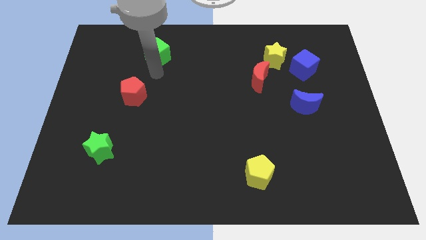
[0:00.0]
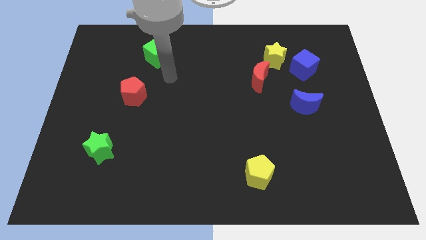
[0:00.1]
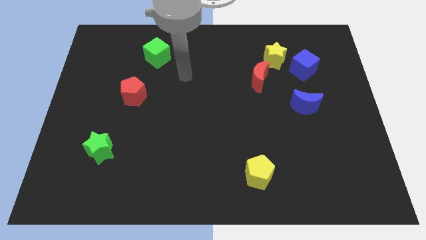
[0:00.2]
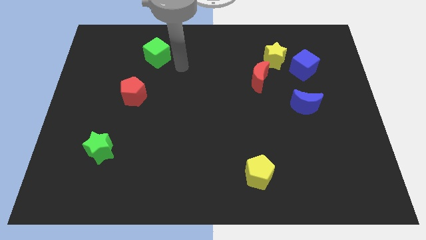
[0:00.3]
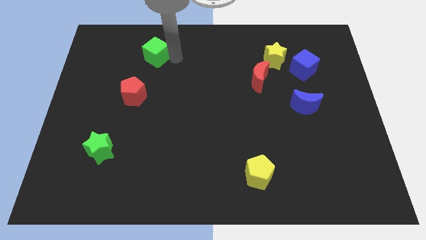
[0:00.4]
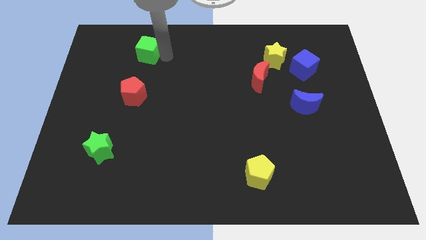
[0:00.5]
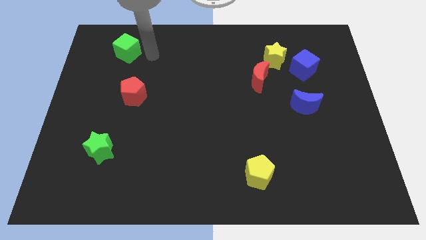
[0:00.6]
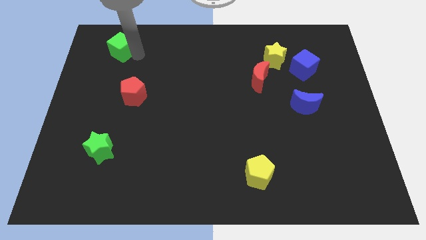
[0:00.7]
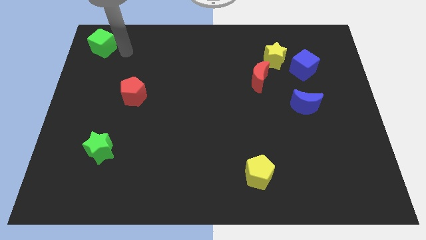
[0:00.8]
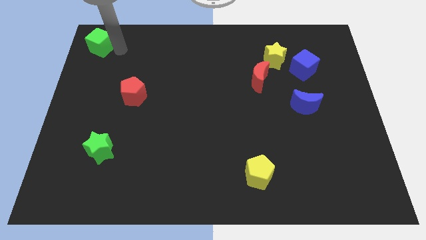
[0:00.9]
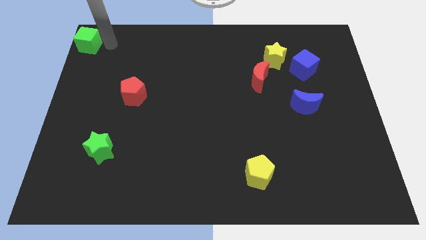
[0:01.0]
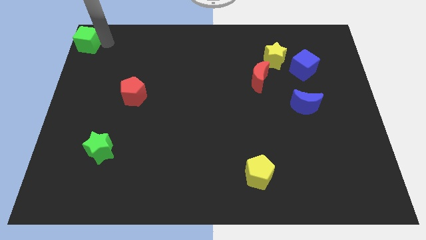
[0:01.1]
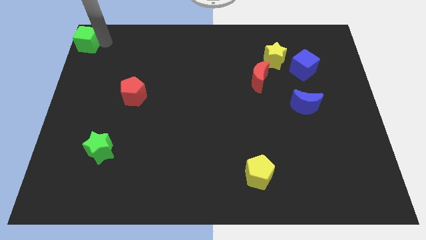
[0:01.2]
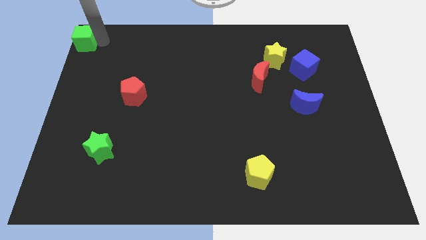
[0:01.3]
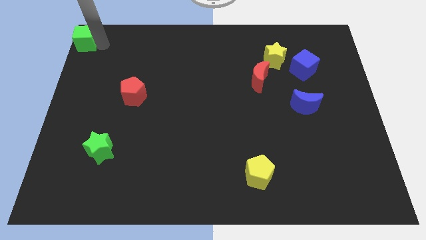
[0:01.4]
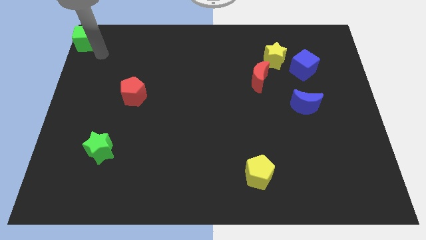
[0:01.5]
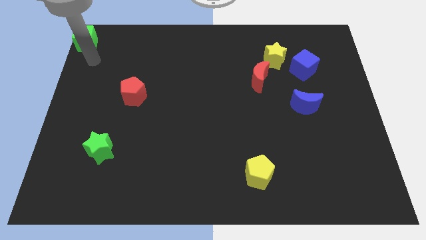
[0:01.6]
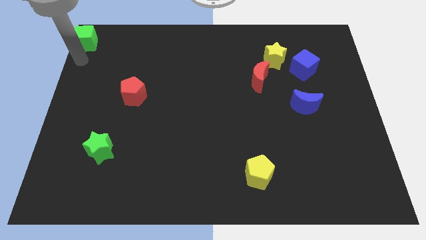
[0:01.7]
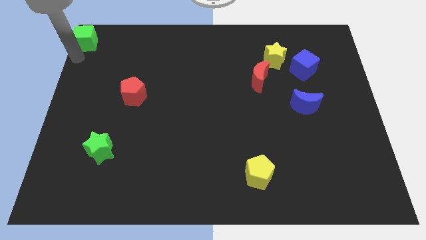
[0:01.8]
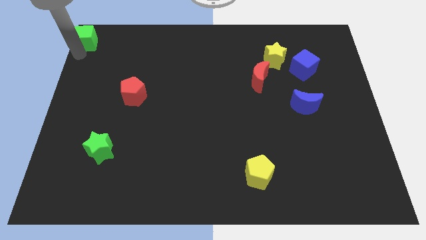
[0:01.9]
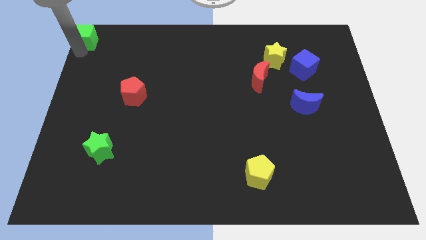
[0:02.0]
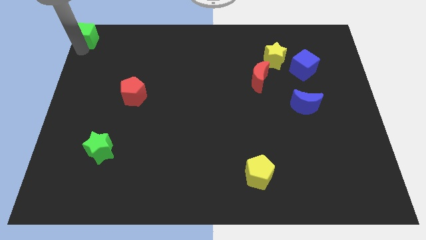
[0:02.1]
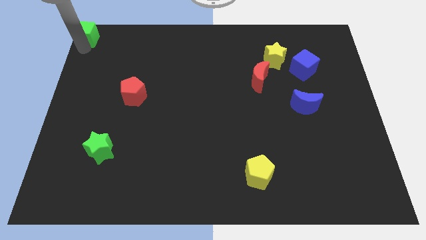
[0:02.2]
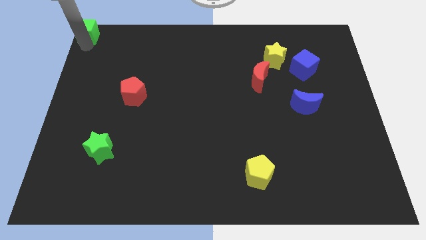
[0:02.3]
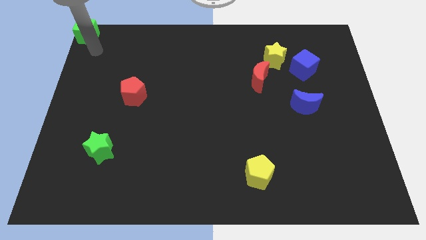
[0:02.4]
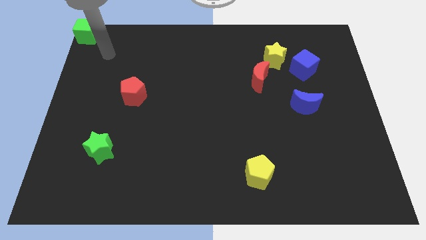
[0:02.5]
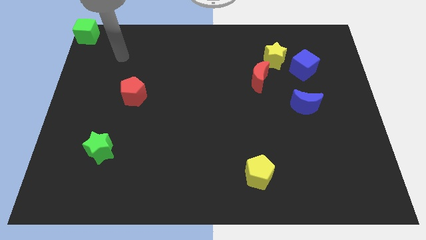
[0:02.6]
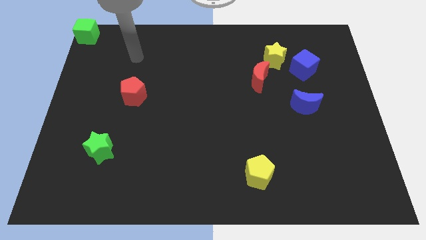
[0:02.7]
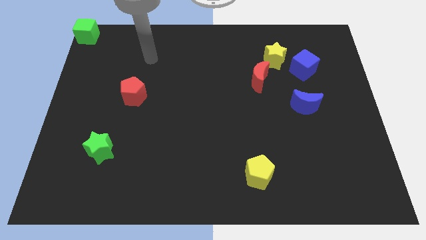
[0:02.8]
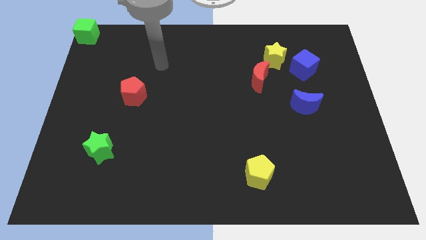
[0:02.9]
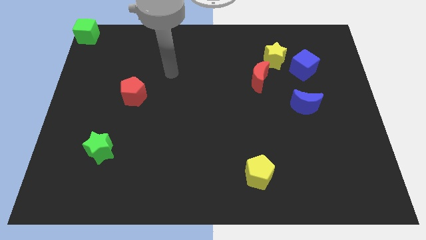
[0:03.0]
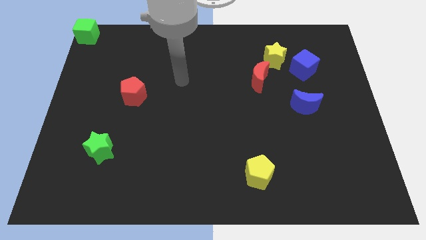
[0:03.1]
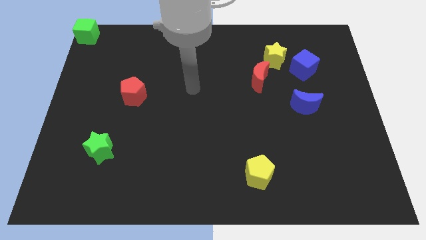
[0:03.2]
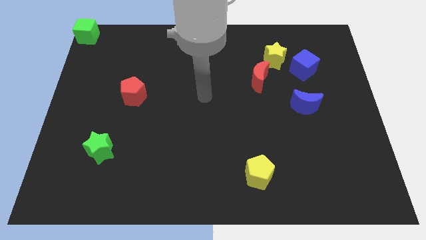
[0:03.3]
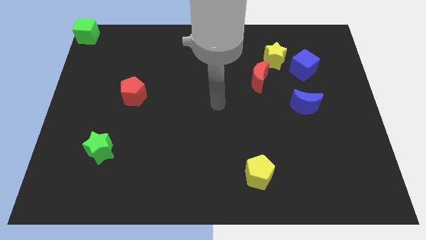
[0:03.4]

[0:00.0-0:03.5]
push the green cube towards the top left corner of the board

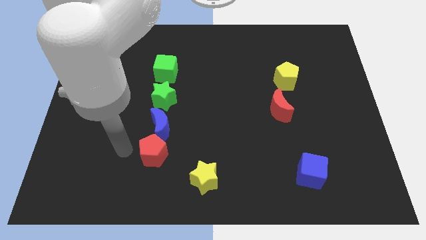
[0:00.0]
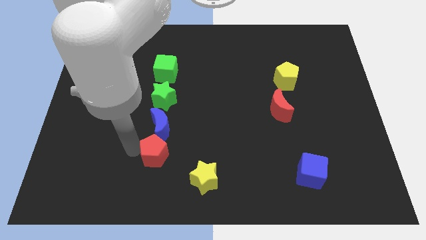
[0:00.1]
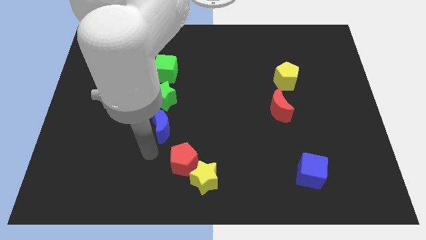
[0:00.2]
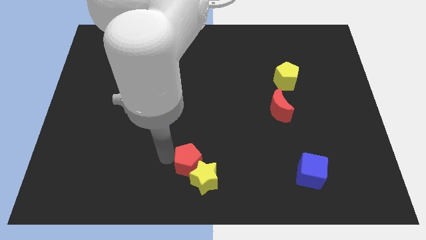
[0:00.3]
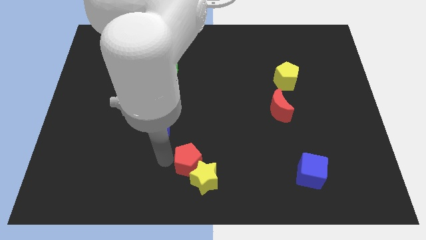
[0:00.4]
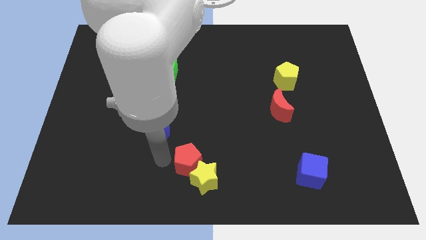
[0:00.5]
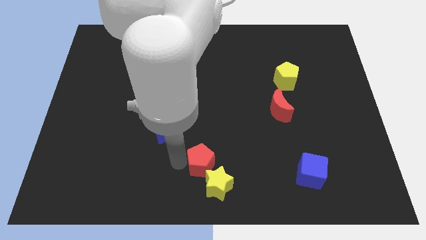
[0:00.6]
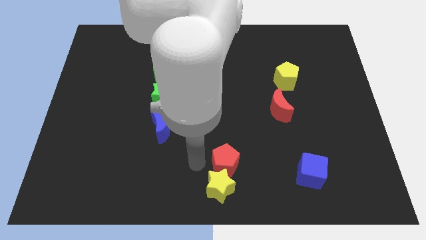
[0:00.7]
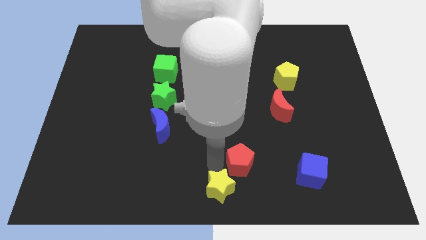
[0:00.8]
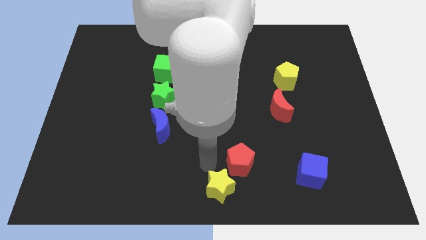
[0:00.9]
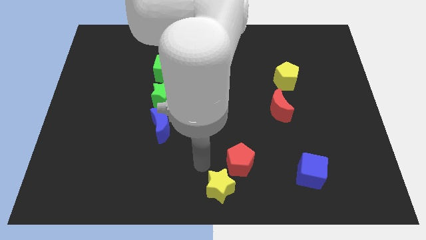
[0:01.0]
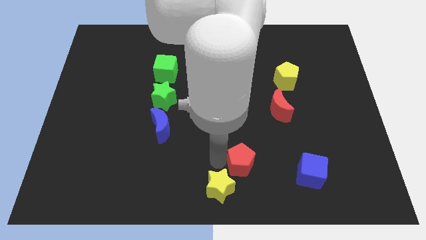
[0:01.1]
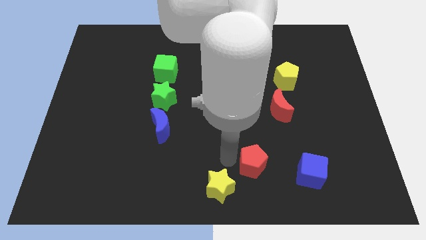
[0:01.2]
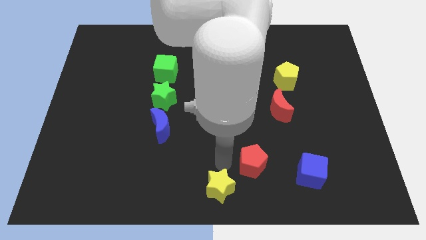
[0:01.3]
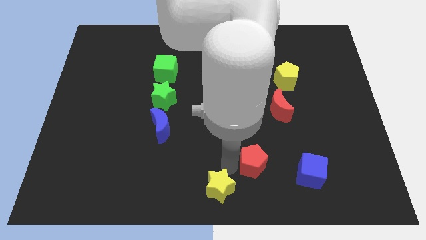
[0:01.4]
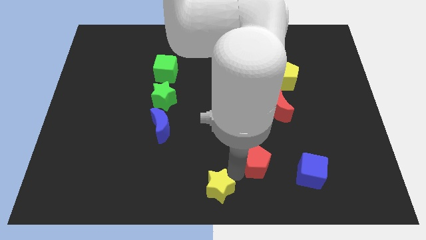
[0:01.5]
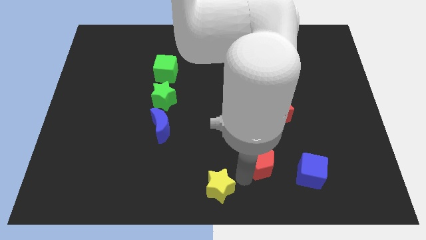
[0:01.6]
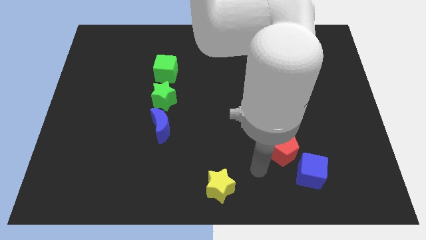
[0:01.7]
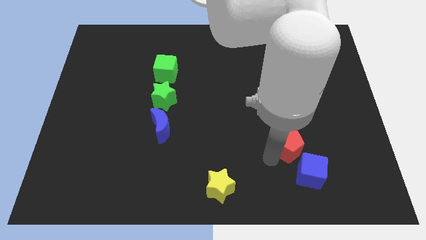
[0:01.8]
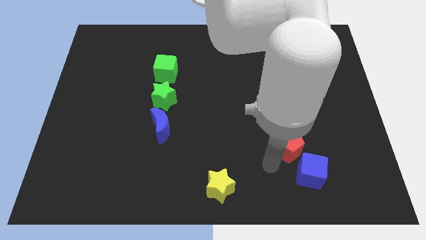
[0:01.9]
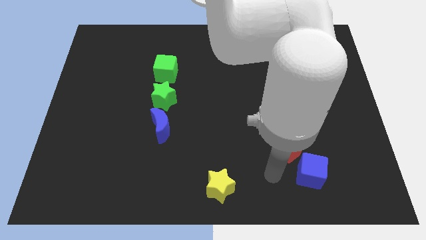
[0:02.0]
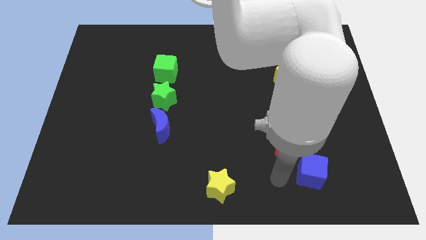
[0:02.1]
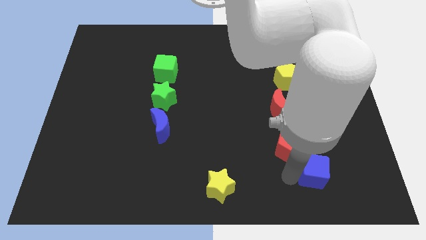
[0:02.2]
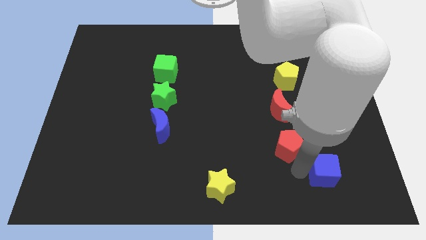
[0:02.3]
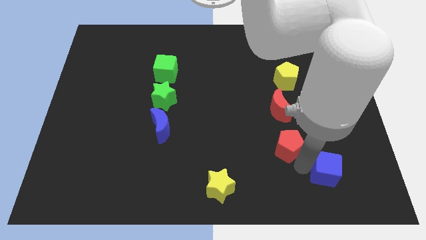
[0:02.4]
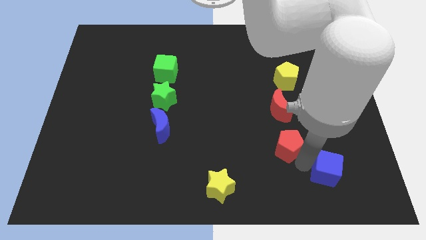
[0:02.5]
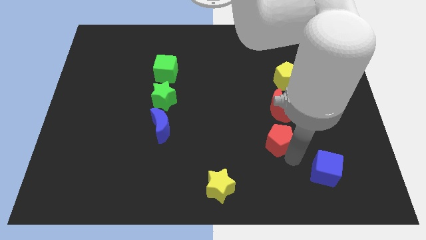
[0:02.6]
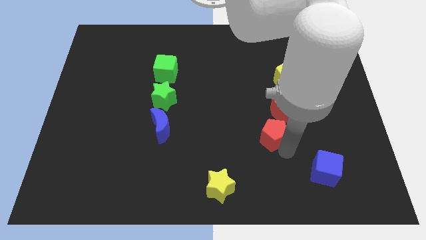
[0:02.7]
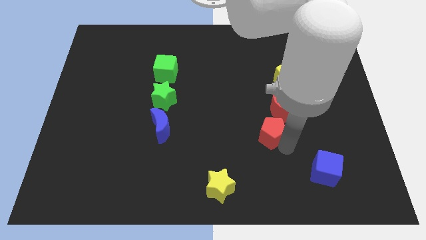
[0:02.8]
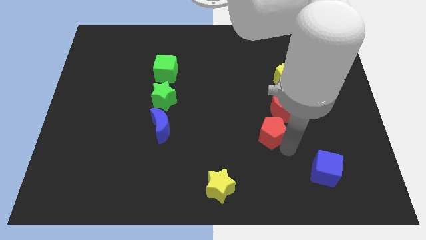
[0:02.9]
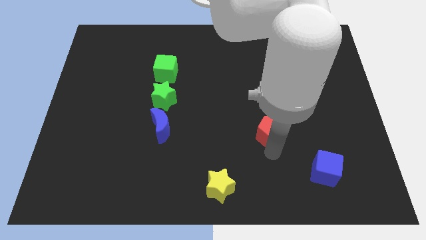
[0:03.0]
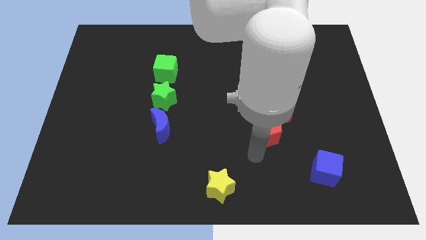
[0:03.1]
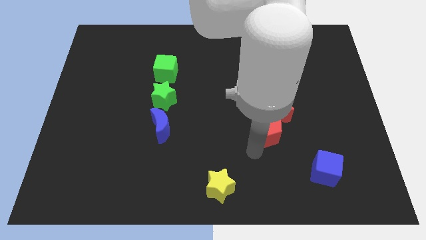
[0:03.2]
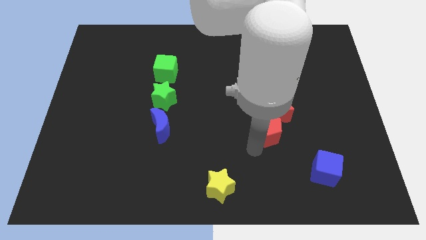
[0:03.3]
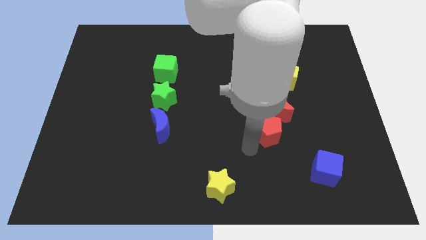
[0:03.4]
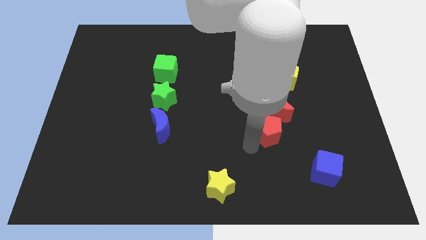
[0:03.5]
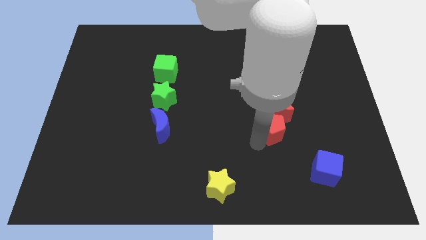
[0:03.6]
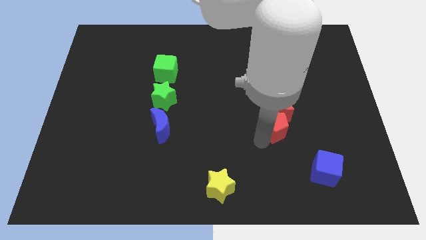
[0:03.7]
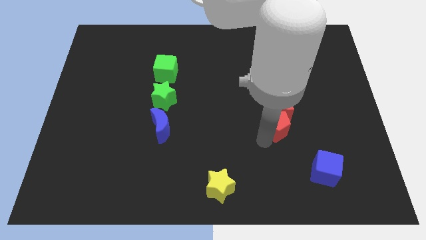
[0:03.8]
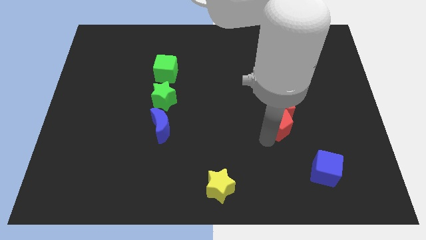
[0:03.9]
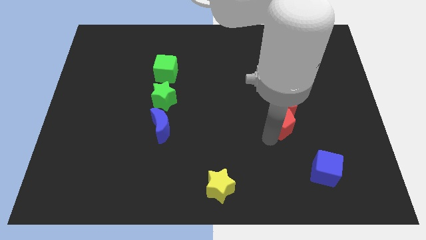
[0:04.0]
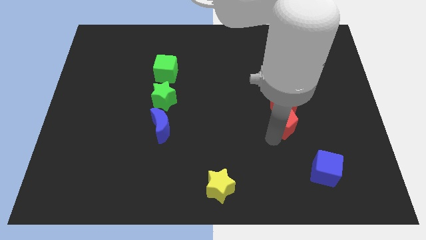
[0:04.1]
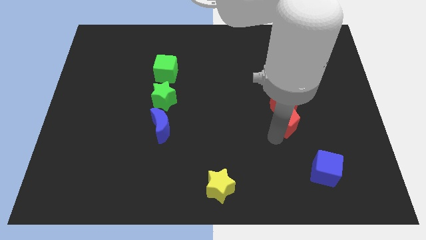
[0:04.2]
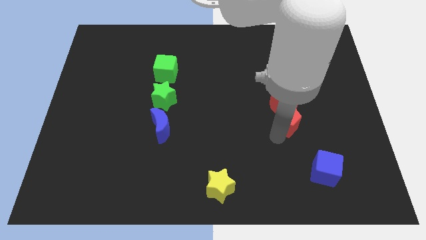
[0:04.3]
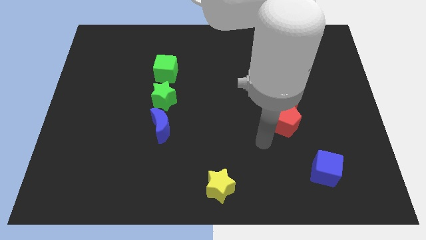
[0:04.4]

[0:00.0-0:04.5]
move red pentagon to the bottom of red crescent

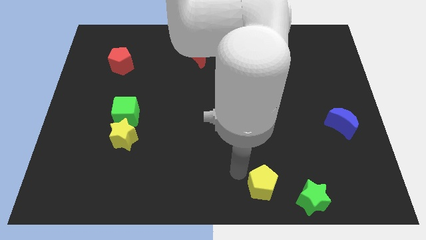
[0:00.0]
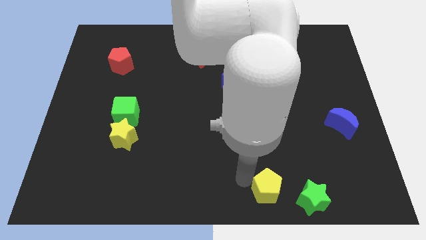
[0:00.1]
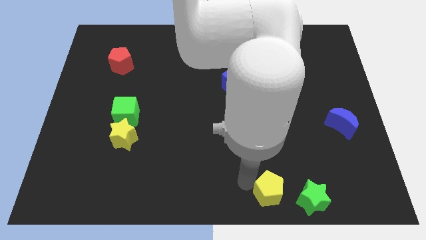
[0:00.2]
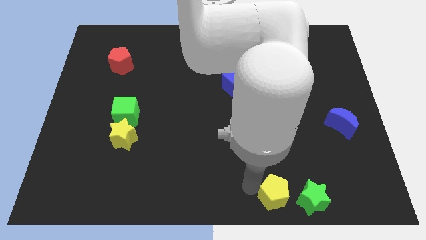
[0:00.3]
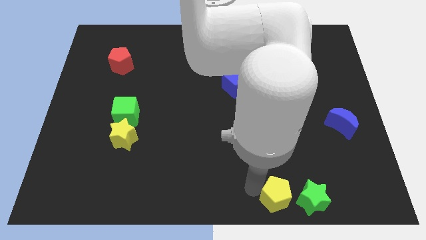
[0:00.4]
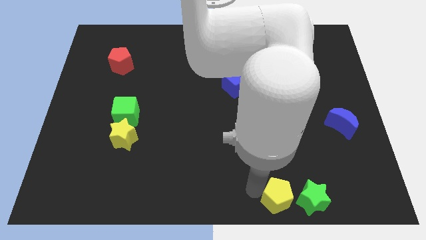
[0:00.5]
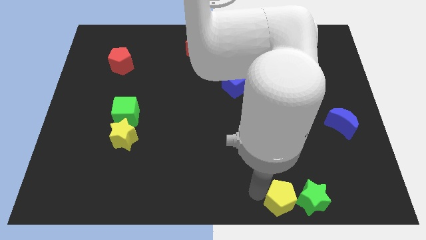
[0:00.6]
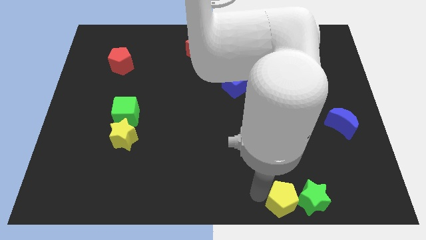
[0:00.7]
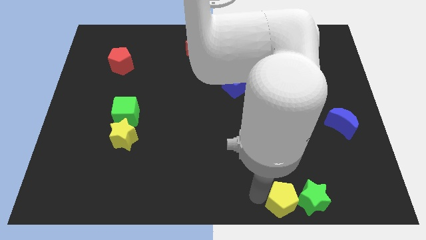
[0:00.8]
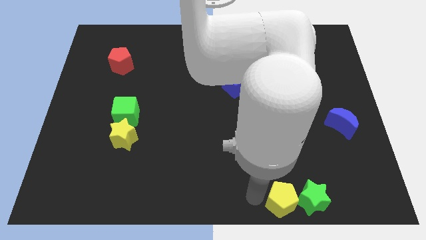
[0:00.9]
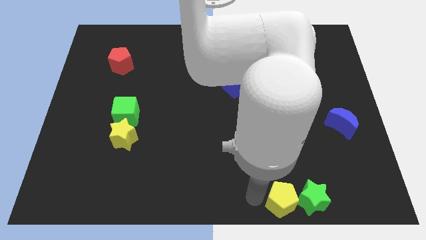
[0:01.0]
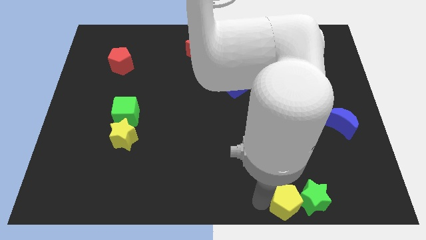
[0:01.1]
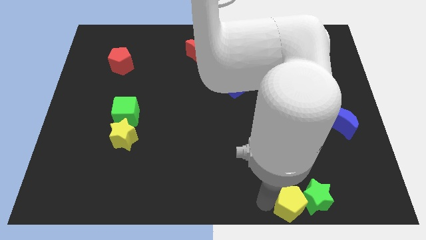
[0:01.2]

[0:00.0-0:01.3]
place yellow pentagon to the left side of the green star
